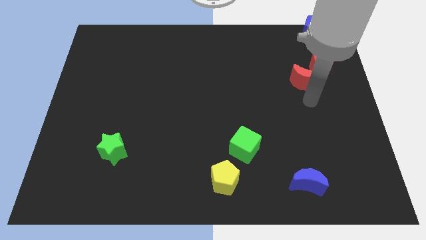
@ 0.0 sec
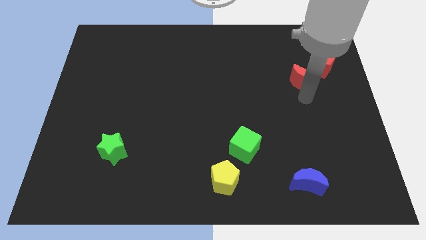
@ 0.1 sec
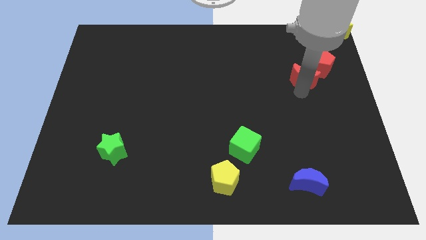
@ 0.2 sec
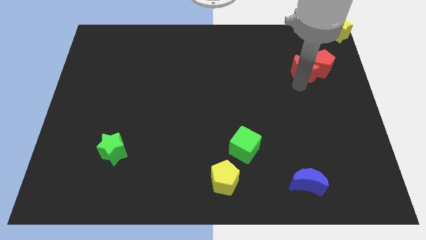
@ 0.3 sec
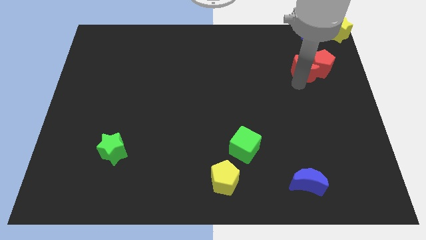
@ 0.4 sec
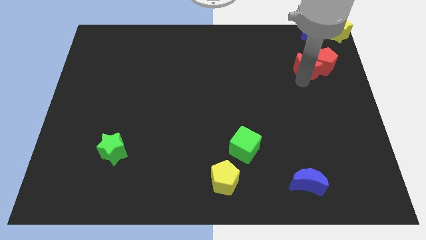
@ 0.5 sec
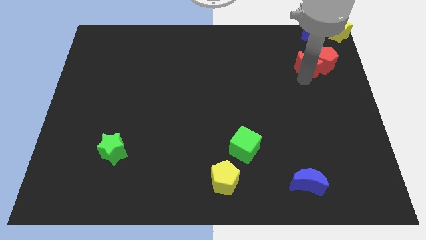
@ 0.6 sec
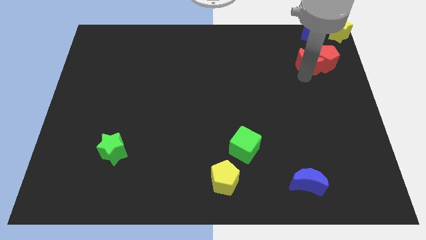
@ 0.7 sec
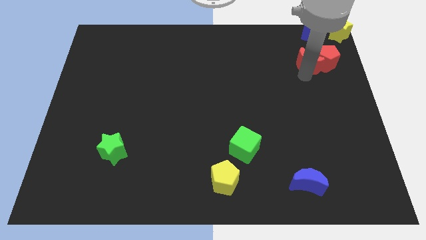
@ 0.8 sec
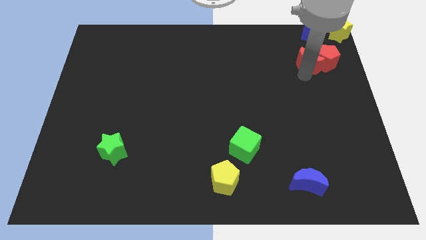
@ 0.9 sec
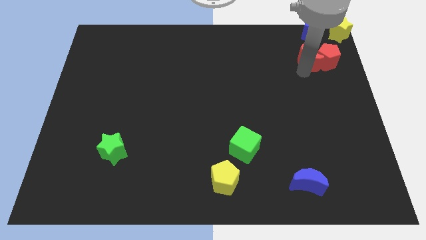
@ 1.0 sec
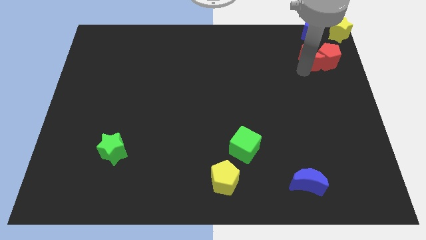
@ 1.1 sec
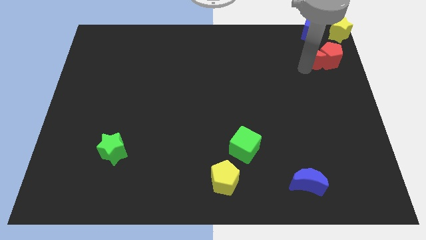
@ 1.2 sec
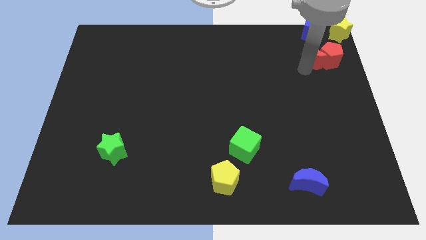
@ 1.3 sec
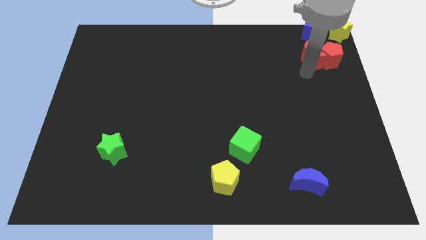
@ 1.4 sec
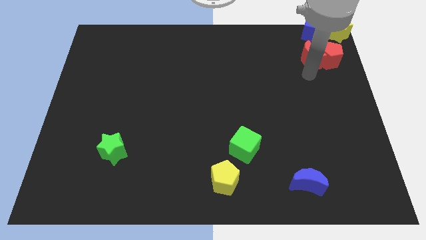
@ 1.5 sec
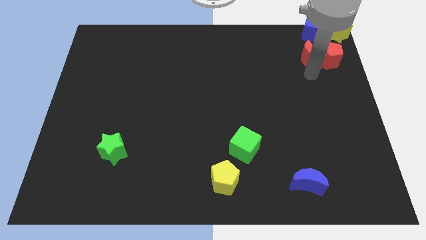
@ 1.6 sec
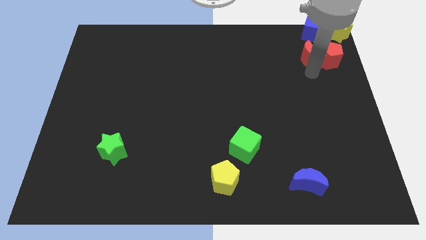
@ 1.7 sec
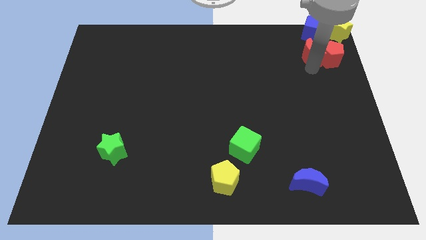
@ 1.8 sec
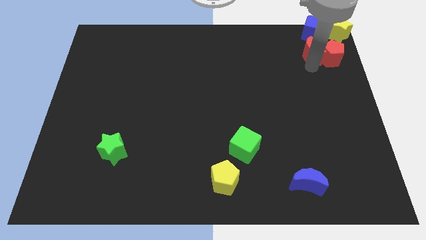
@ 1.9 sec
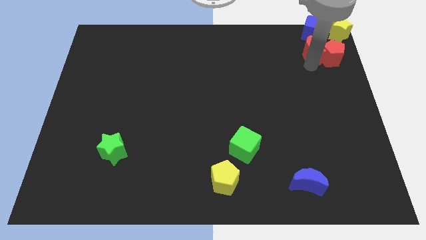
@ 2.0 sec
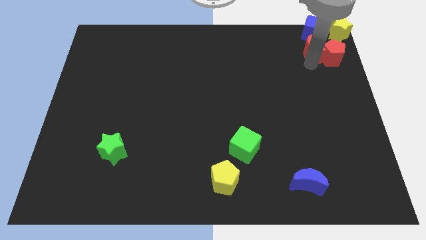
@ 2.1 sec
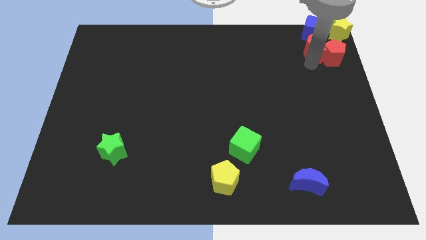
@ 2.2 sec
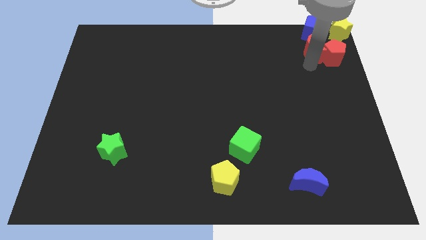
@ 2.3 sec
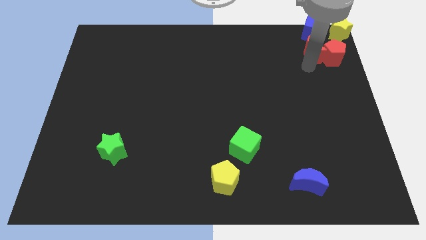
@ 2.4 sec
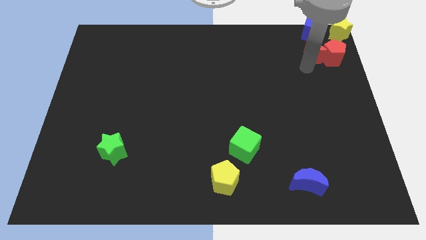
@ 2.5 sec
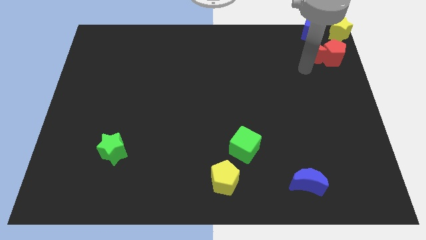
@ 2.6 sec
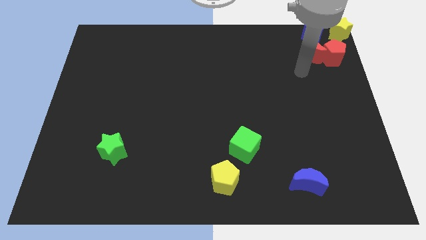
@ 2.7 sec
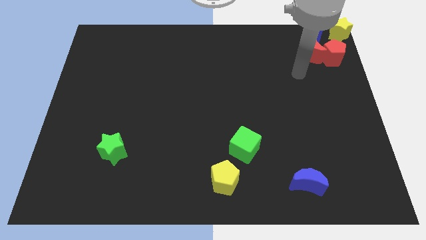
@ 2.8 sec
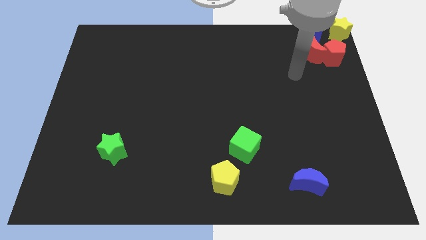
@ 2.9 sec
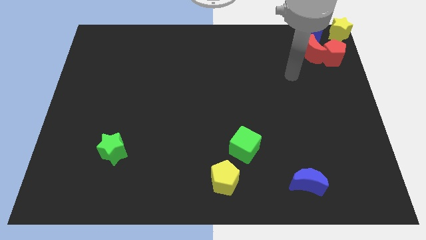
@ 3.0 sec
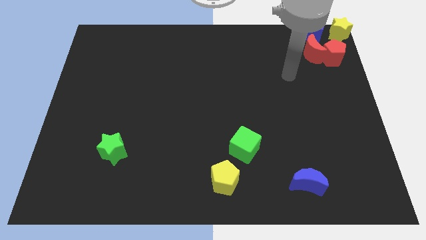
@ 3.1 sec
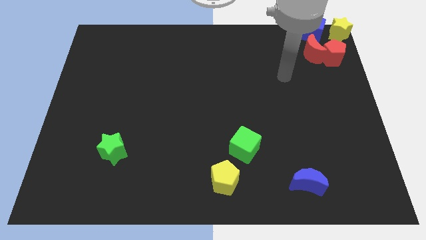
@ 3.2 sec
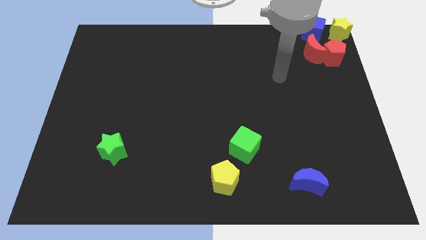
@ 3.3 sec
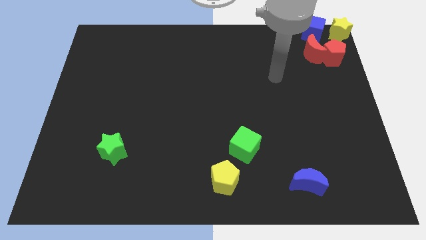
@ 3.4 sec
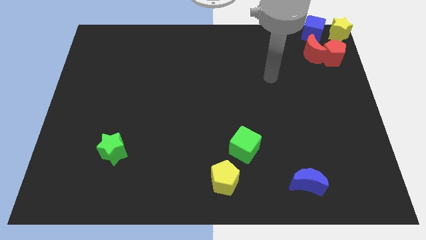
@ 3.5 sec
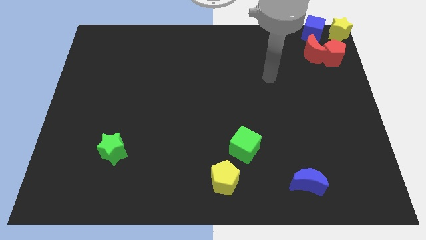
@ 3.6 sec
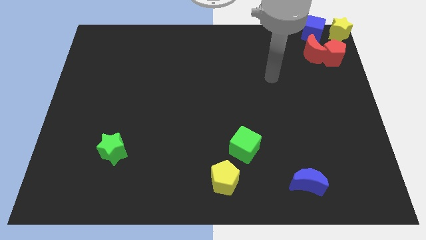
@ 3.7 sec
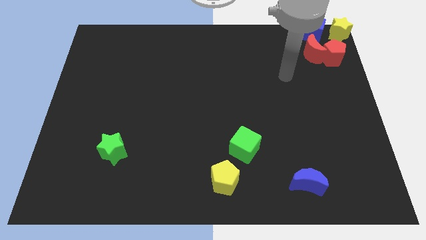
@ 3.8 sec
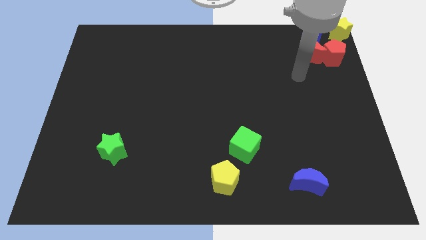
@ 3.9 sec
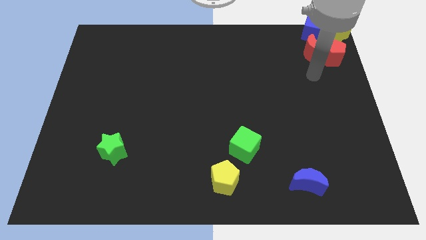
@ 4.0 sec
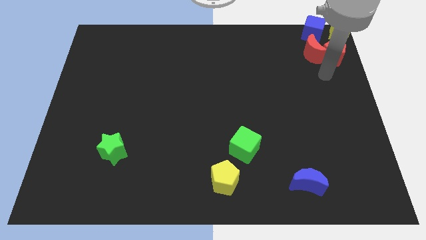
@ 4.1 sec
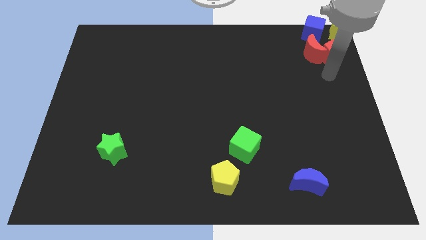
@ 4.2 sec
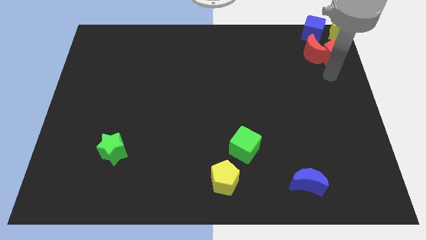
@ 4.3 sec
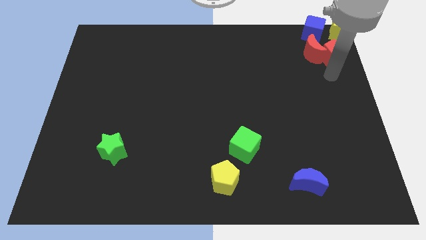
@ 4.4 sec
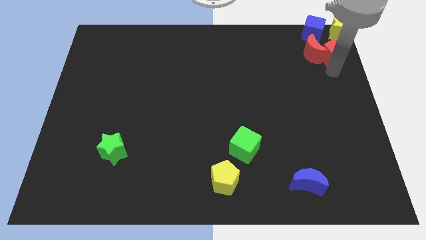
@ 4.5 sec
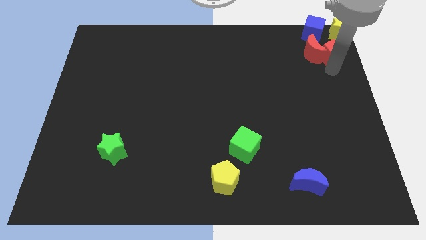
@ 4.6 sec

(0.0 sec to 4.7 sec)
drag red blocks to the top right corner

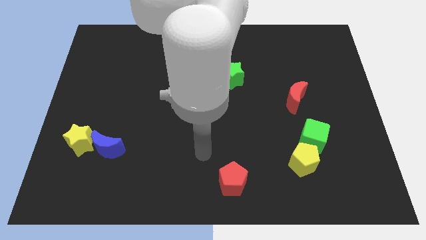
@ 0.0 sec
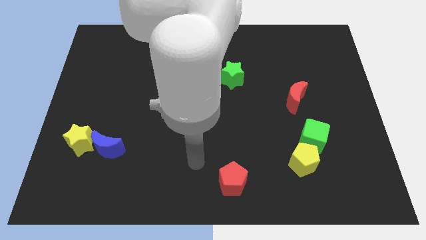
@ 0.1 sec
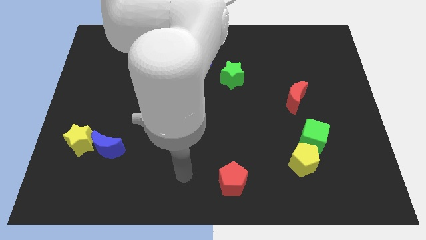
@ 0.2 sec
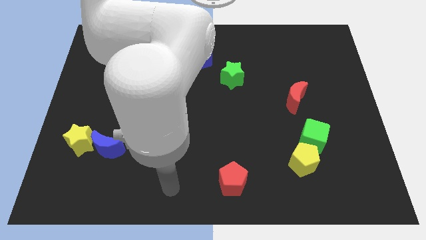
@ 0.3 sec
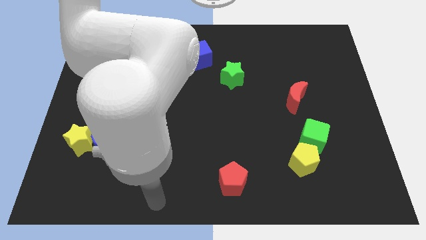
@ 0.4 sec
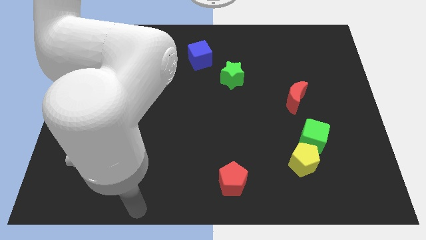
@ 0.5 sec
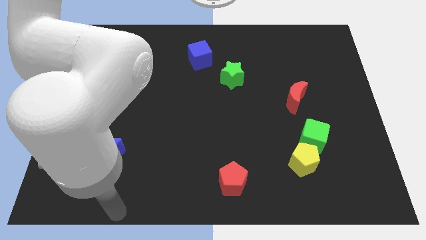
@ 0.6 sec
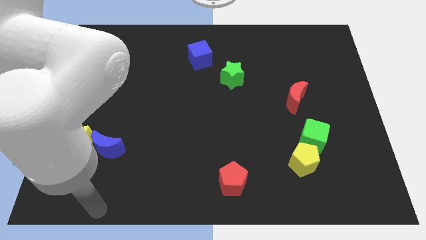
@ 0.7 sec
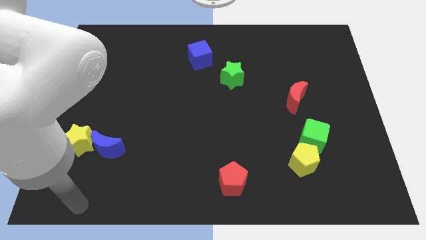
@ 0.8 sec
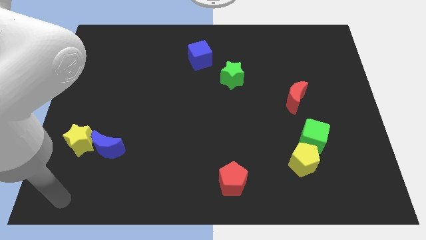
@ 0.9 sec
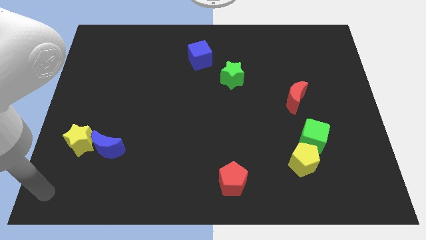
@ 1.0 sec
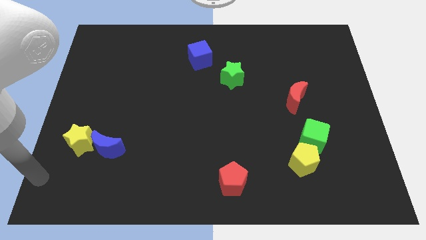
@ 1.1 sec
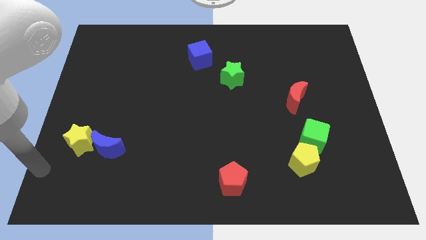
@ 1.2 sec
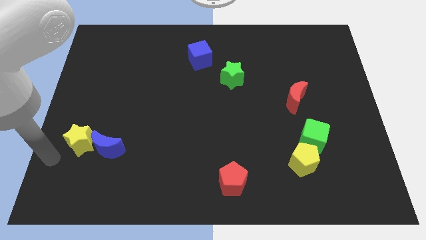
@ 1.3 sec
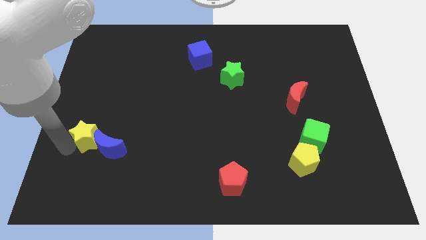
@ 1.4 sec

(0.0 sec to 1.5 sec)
move the arm to the bottom left side of the yellow star

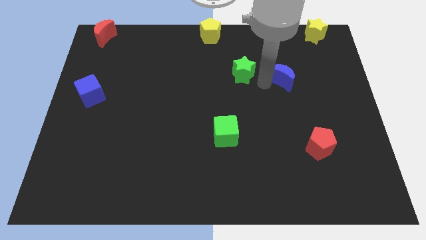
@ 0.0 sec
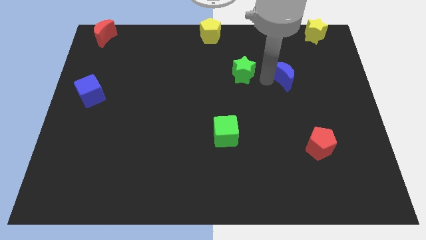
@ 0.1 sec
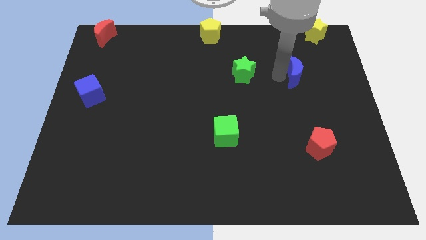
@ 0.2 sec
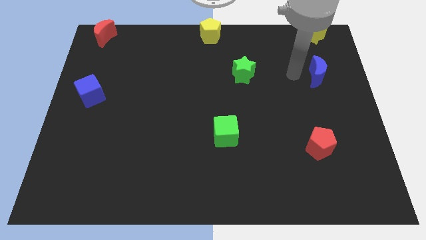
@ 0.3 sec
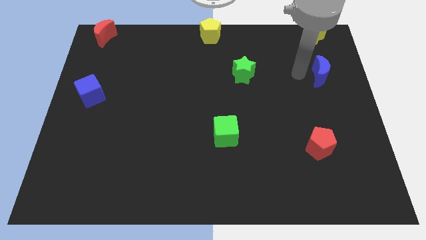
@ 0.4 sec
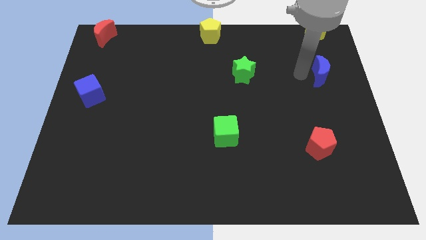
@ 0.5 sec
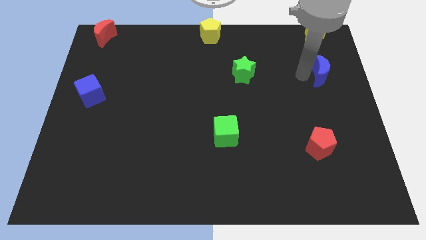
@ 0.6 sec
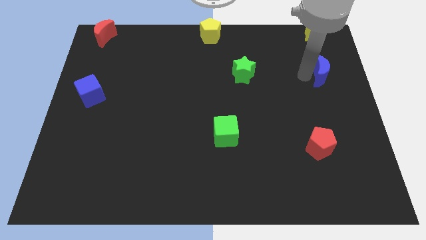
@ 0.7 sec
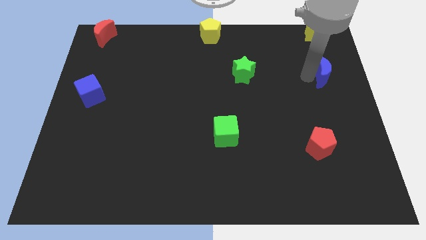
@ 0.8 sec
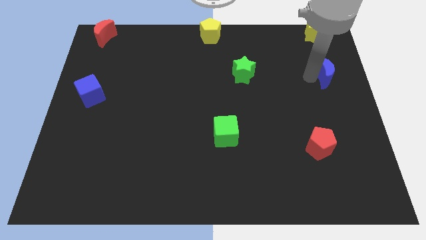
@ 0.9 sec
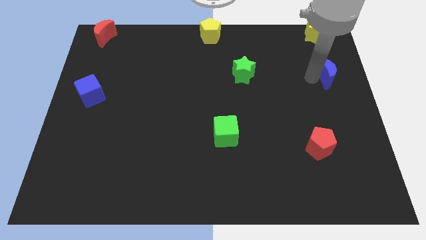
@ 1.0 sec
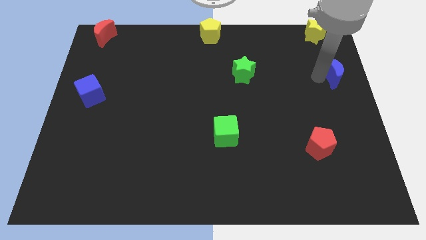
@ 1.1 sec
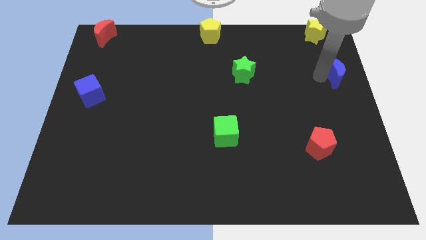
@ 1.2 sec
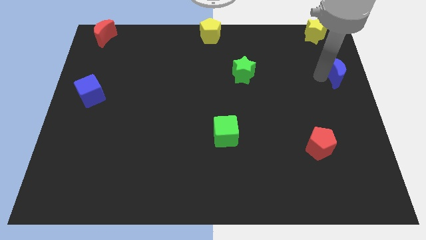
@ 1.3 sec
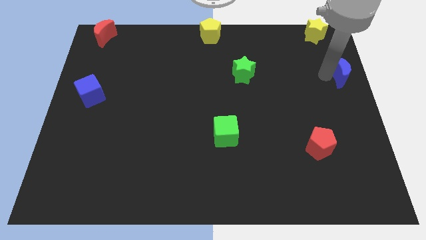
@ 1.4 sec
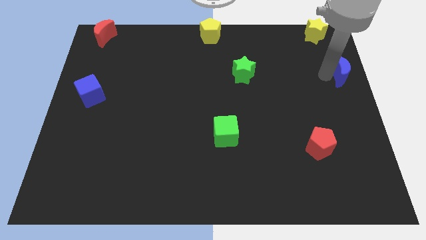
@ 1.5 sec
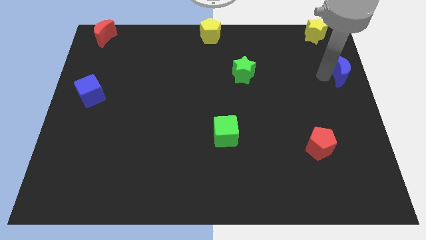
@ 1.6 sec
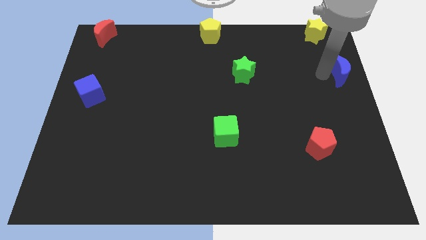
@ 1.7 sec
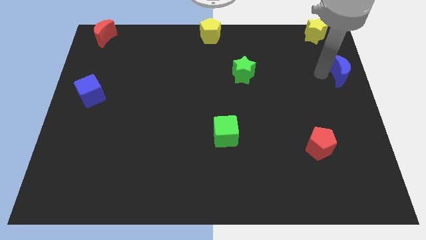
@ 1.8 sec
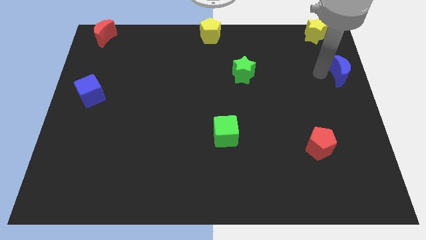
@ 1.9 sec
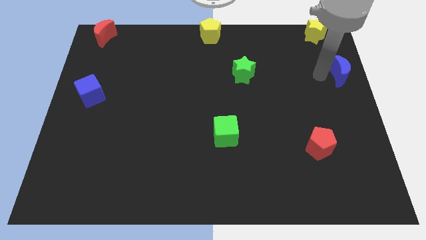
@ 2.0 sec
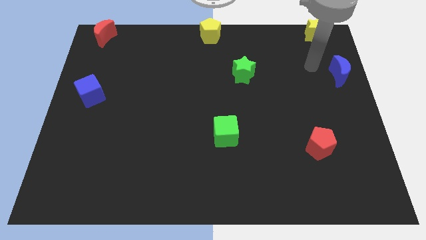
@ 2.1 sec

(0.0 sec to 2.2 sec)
push the blue crescent to the top right side

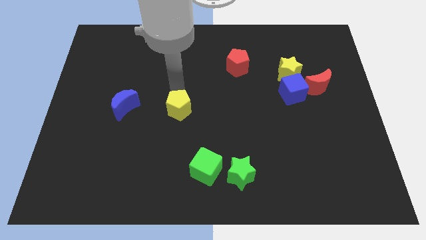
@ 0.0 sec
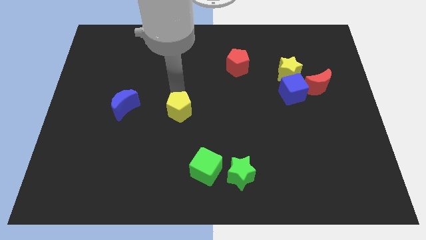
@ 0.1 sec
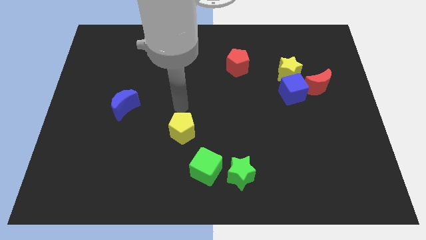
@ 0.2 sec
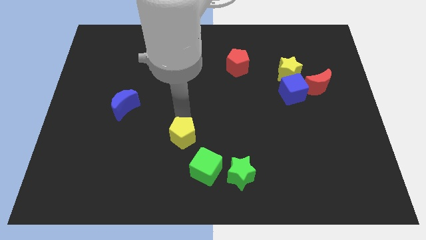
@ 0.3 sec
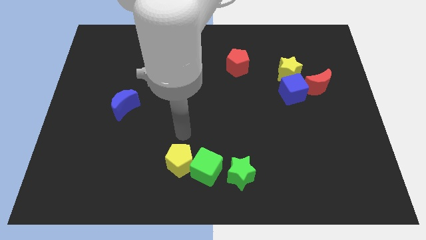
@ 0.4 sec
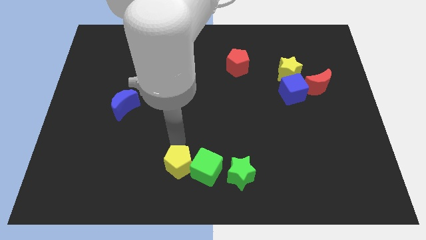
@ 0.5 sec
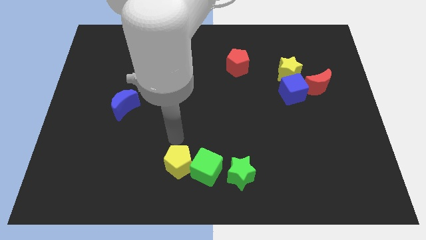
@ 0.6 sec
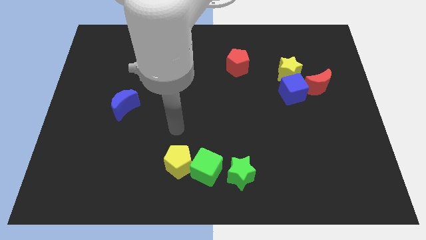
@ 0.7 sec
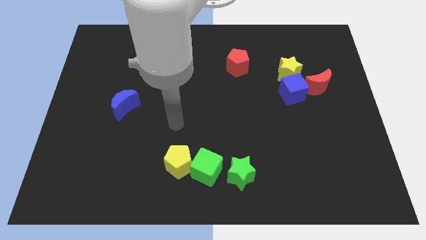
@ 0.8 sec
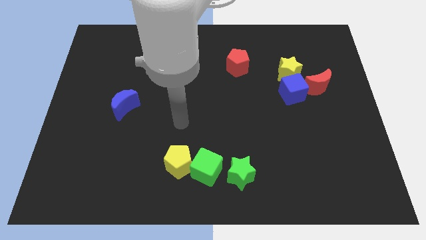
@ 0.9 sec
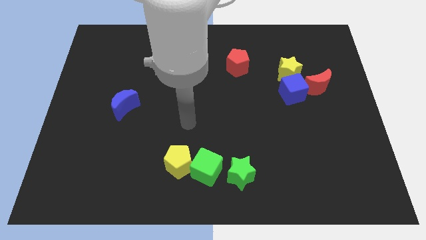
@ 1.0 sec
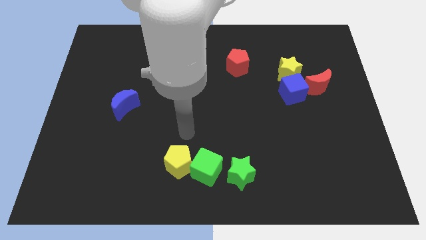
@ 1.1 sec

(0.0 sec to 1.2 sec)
push the yellow pentagon into green cube
